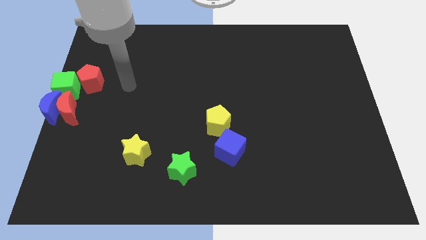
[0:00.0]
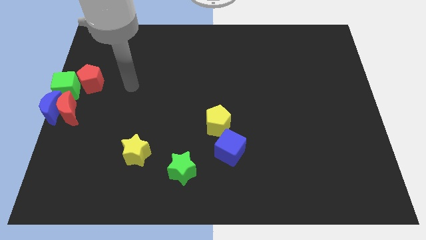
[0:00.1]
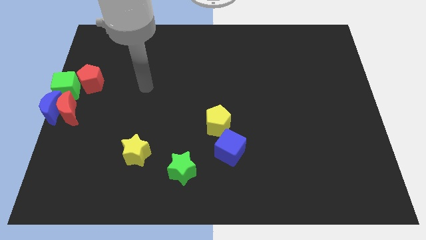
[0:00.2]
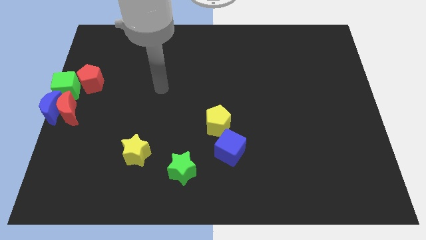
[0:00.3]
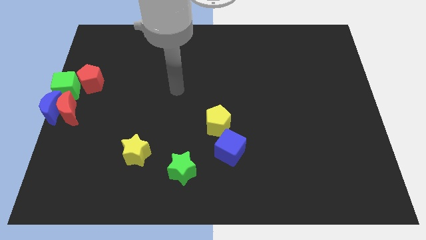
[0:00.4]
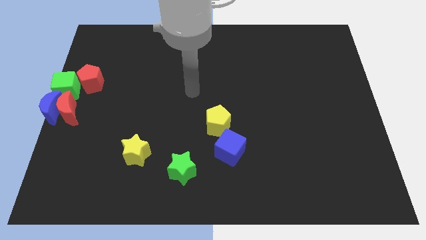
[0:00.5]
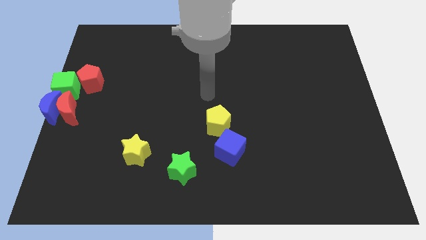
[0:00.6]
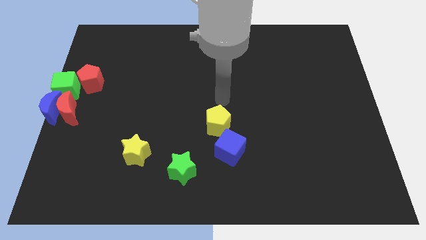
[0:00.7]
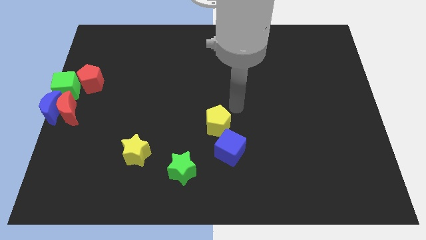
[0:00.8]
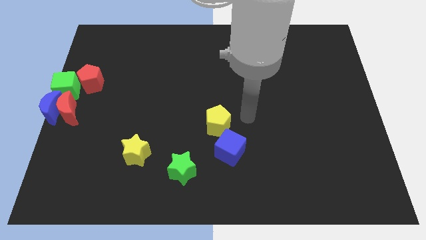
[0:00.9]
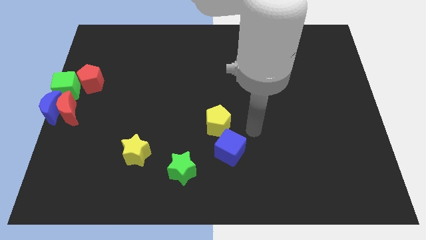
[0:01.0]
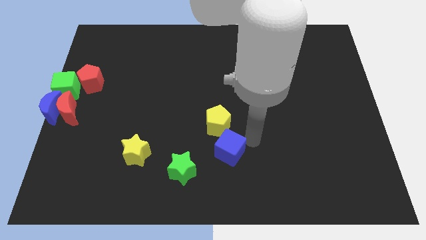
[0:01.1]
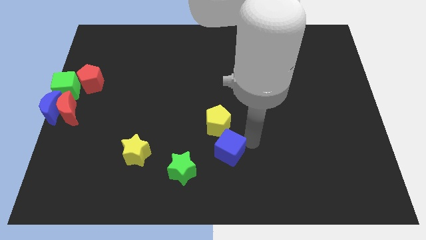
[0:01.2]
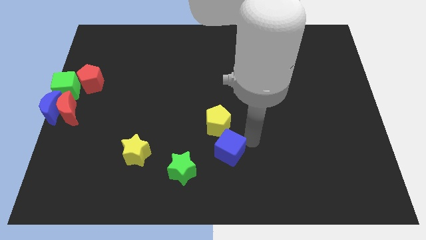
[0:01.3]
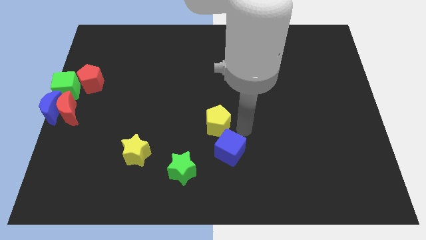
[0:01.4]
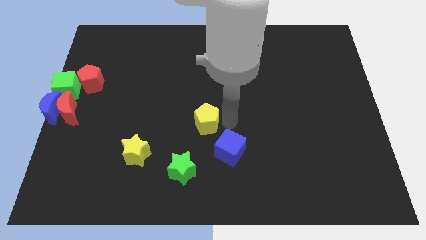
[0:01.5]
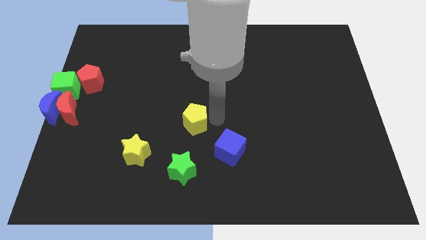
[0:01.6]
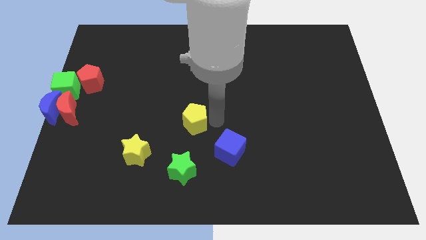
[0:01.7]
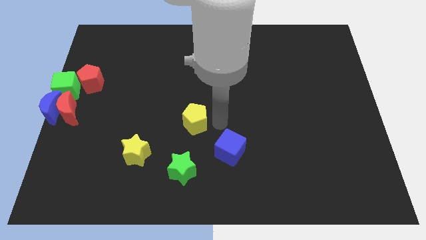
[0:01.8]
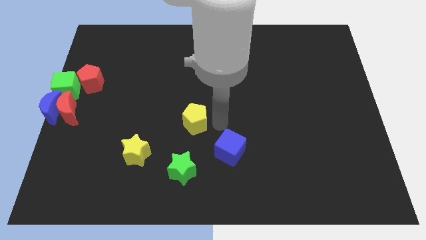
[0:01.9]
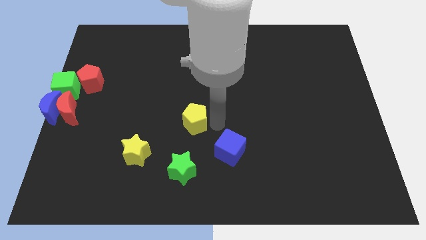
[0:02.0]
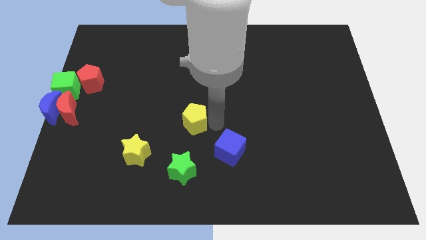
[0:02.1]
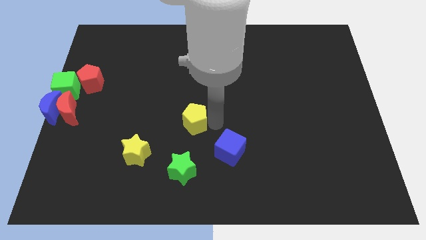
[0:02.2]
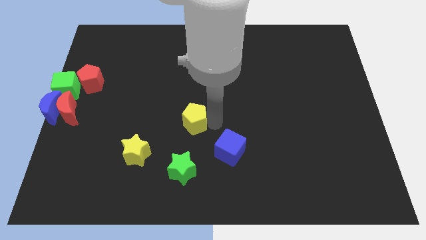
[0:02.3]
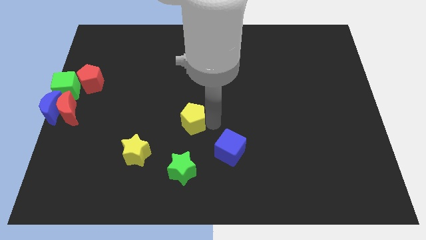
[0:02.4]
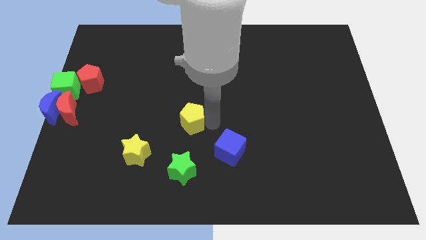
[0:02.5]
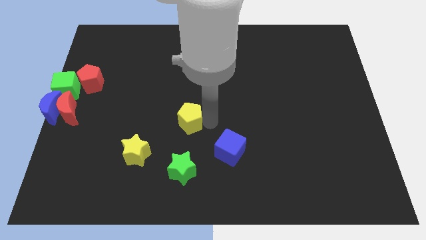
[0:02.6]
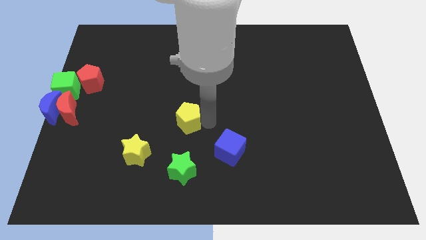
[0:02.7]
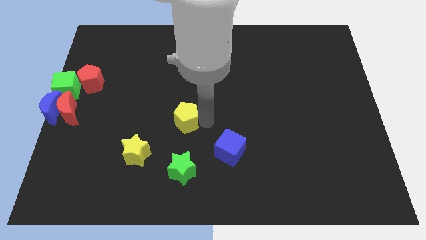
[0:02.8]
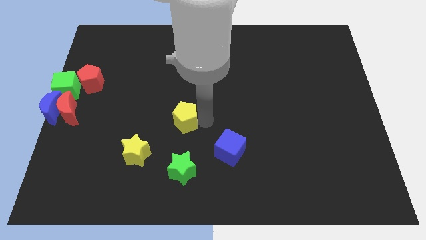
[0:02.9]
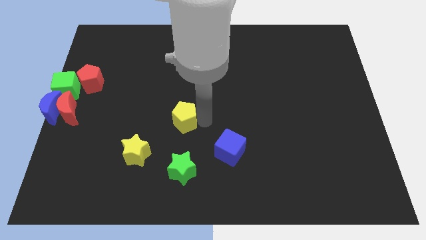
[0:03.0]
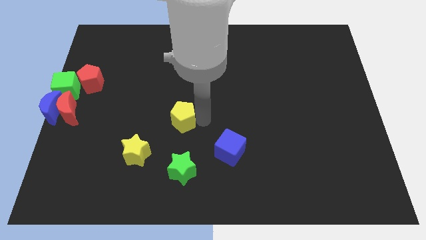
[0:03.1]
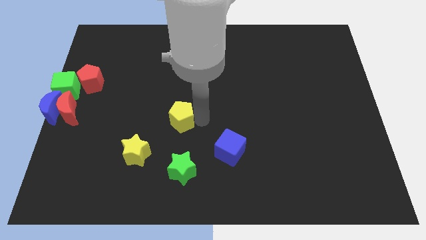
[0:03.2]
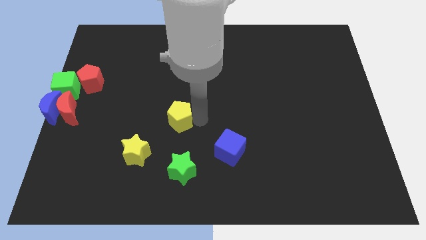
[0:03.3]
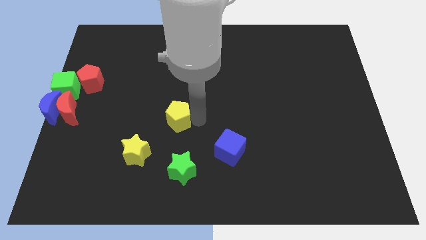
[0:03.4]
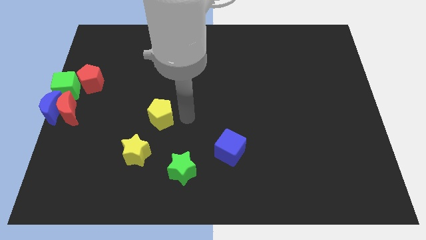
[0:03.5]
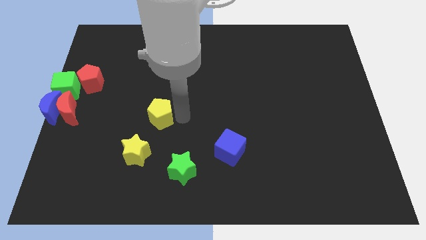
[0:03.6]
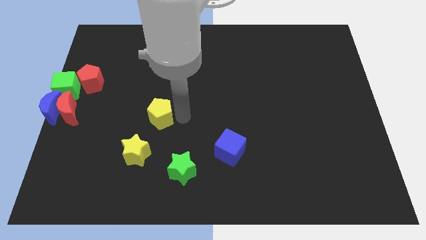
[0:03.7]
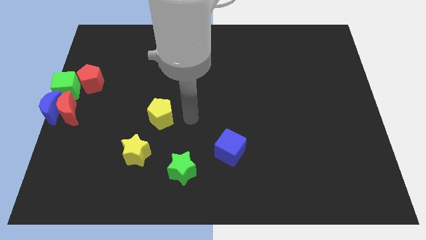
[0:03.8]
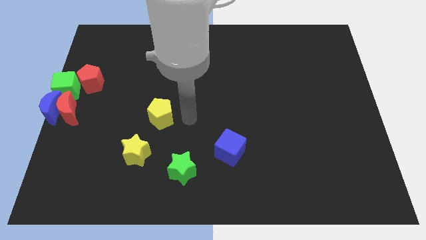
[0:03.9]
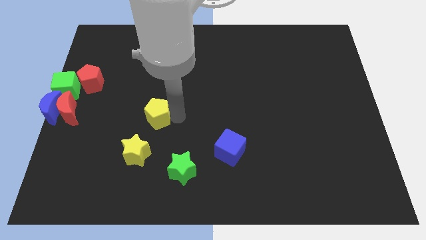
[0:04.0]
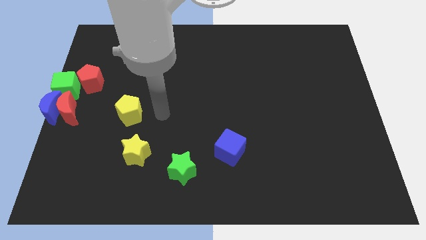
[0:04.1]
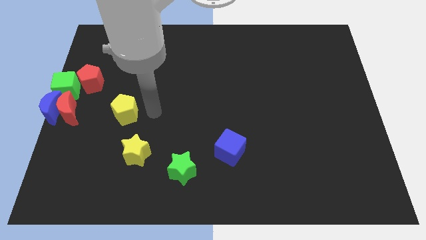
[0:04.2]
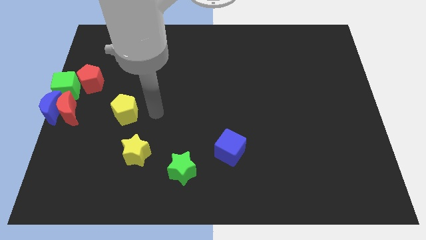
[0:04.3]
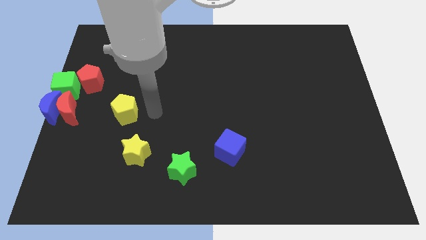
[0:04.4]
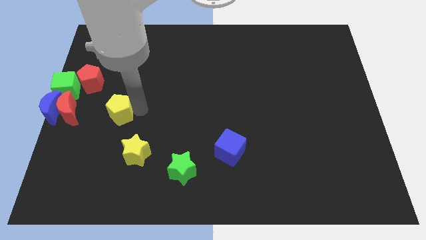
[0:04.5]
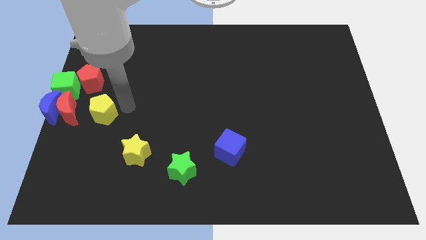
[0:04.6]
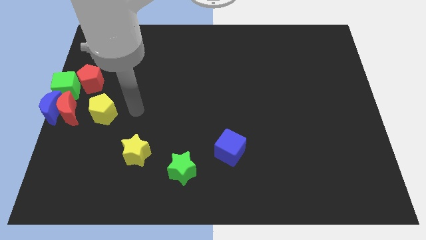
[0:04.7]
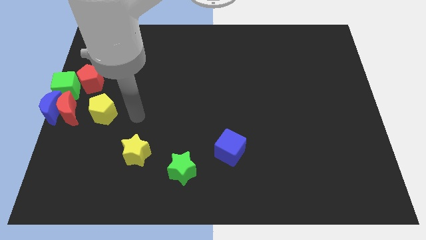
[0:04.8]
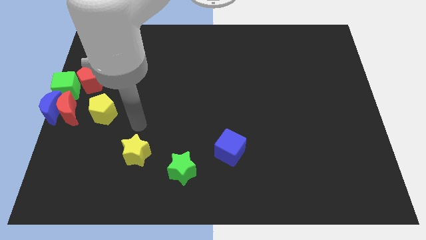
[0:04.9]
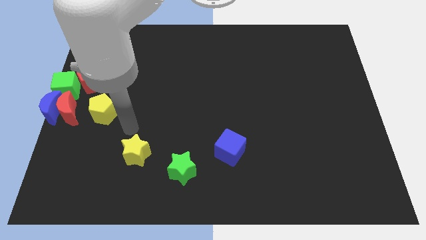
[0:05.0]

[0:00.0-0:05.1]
push the yellow pentagon to the right of the red crescent

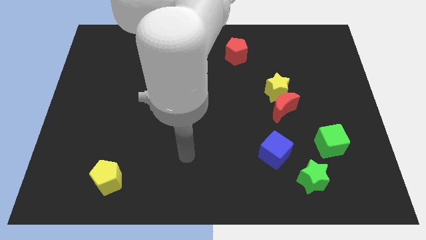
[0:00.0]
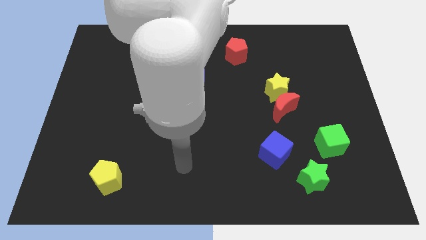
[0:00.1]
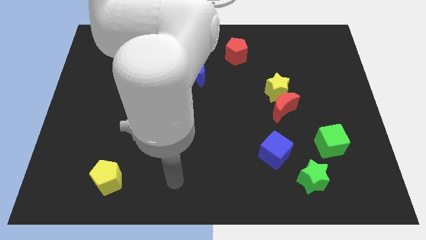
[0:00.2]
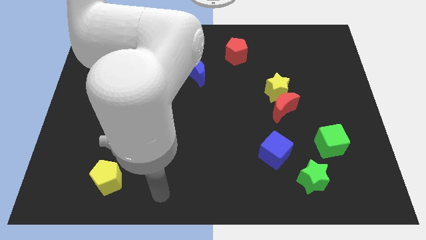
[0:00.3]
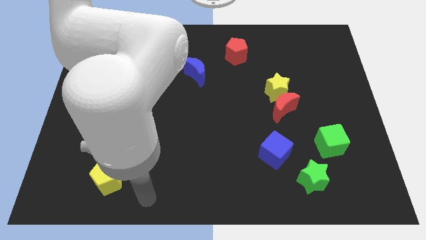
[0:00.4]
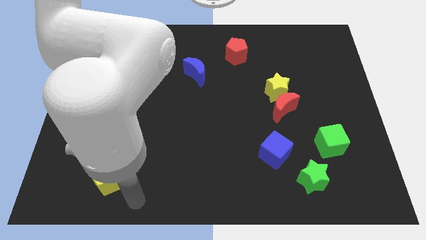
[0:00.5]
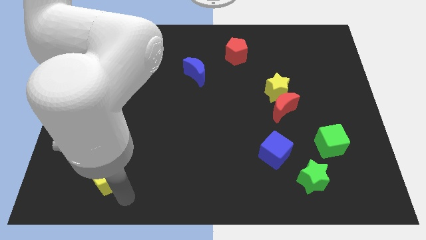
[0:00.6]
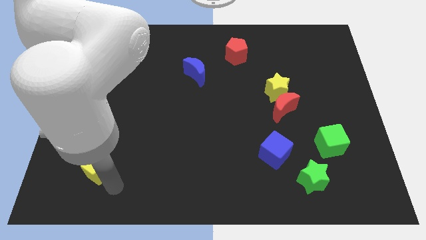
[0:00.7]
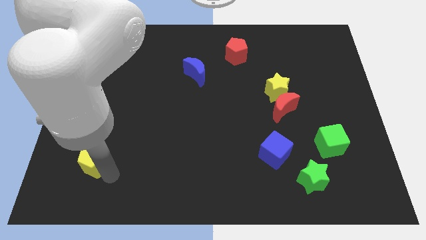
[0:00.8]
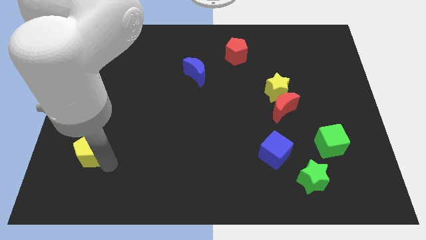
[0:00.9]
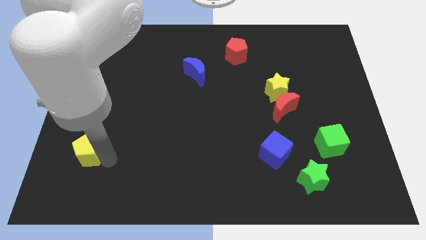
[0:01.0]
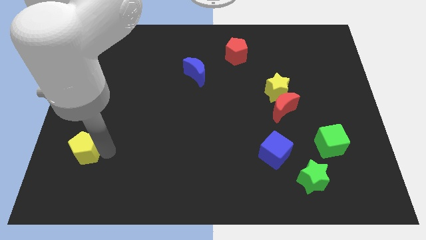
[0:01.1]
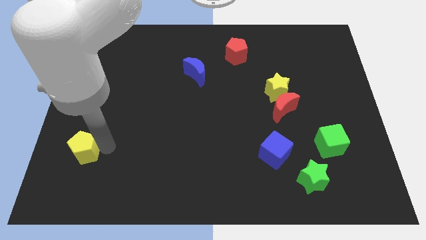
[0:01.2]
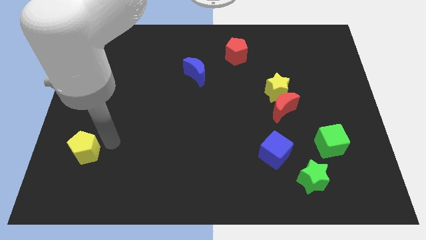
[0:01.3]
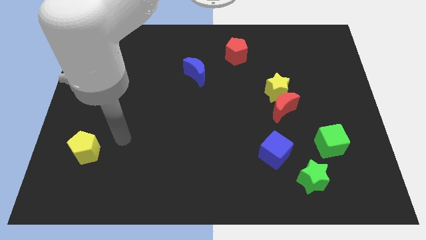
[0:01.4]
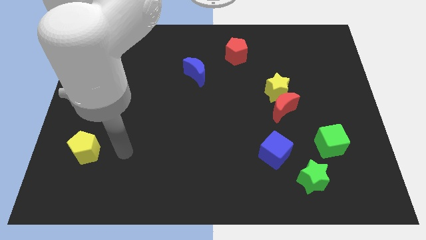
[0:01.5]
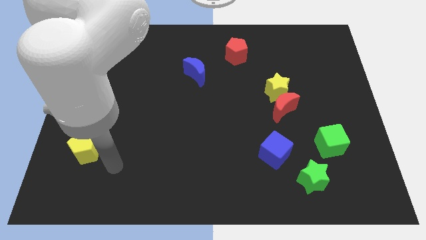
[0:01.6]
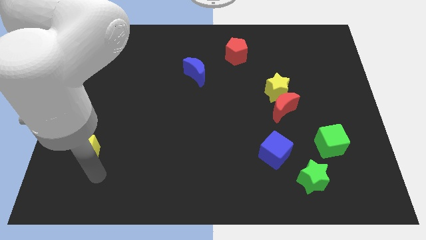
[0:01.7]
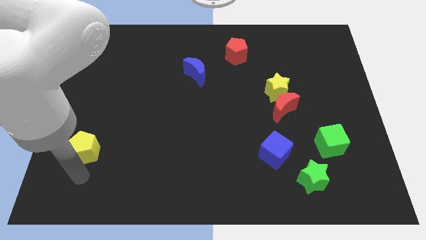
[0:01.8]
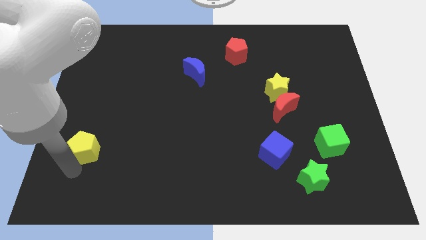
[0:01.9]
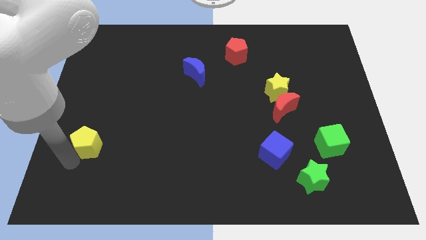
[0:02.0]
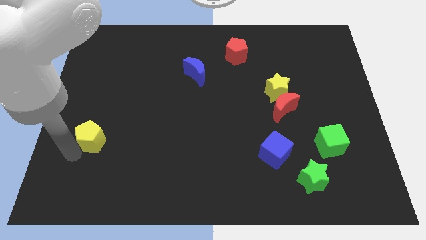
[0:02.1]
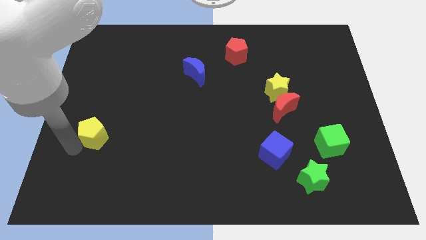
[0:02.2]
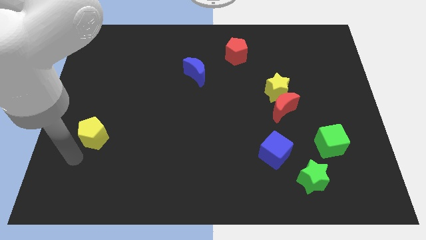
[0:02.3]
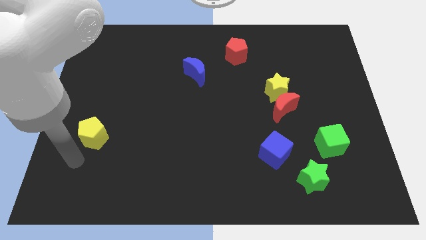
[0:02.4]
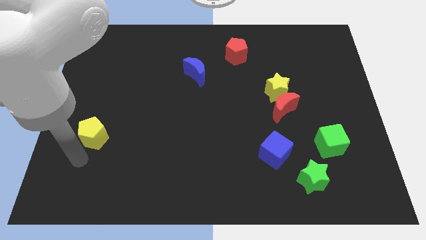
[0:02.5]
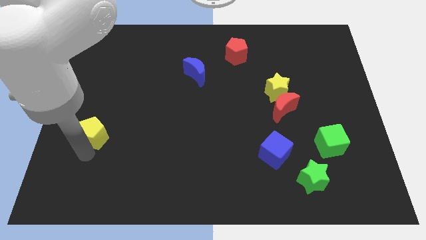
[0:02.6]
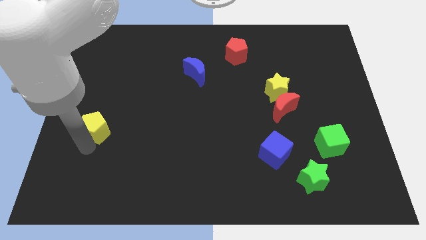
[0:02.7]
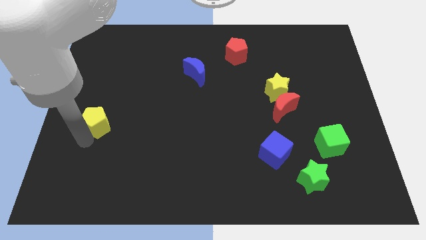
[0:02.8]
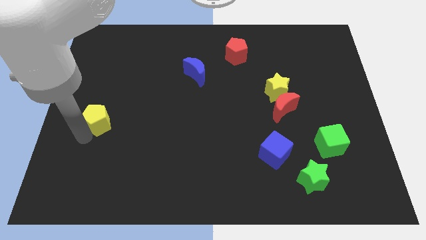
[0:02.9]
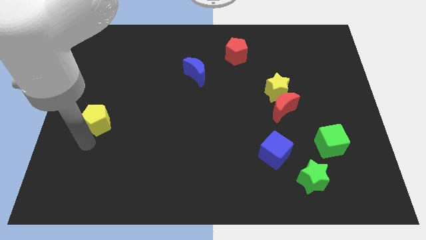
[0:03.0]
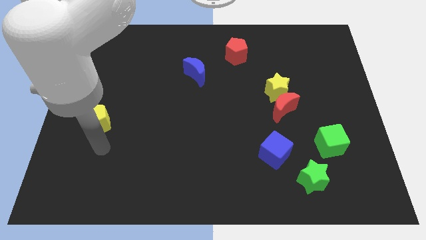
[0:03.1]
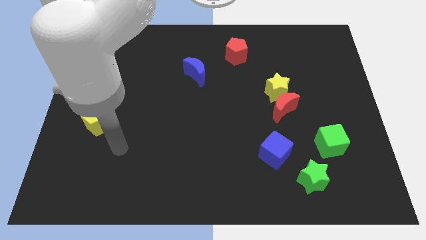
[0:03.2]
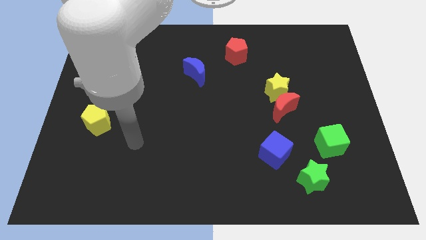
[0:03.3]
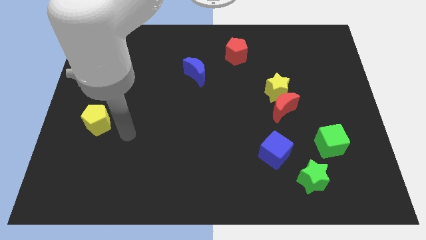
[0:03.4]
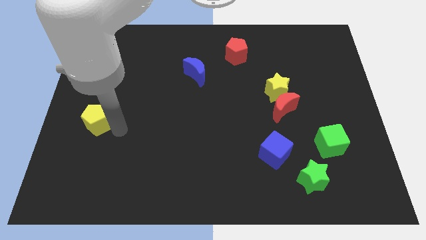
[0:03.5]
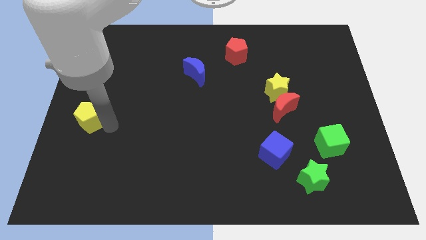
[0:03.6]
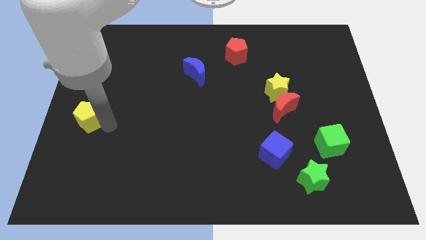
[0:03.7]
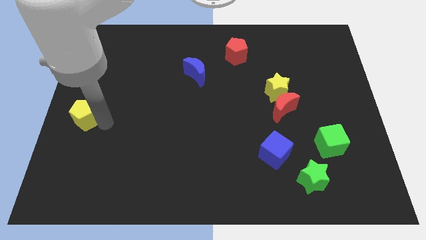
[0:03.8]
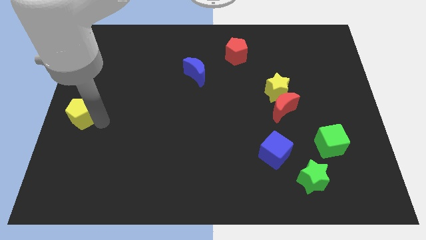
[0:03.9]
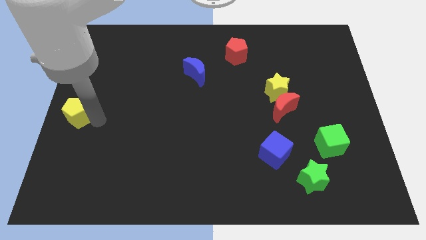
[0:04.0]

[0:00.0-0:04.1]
drag the yellow pentagon to the center left
